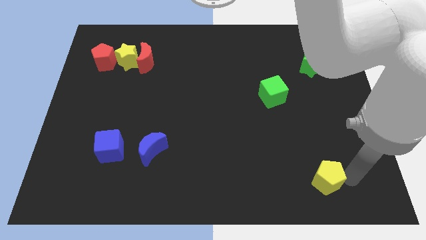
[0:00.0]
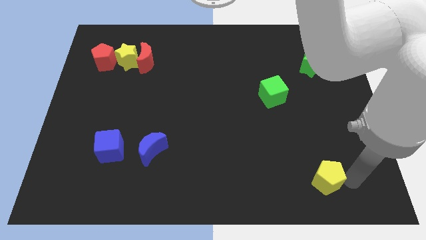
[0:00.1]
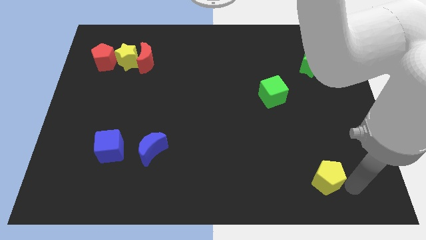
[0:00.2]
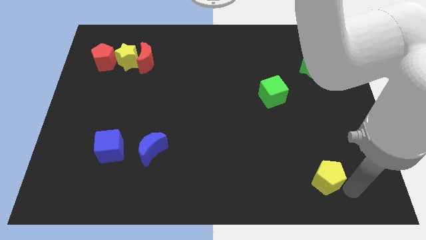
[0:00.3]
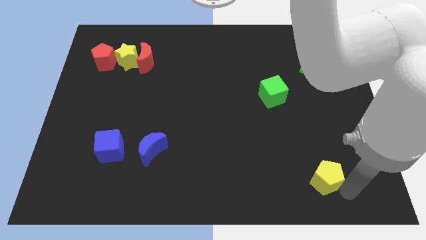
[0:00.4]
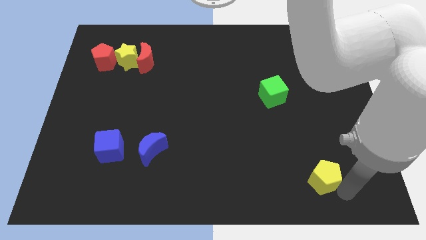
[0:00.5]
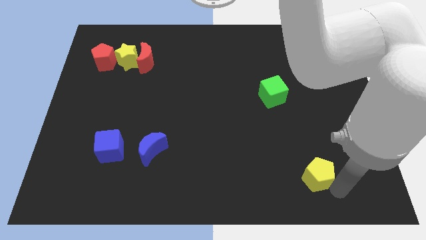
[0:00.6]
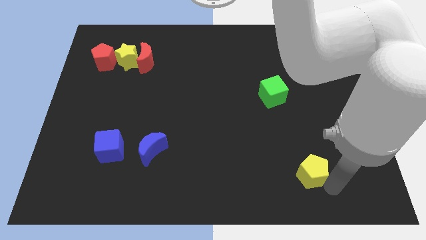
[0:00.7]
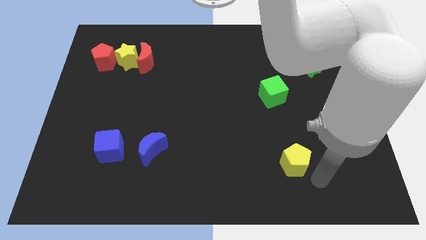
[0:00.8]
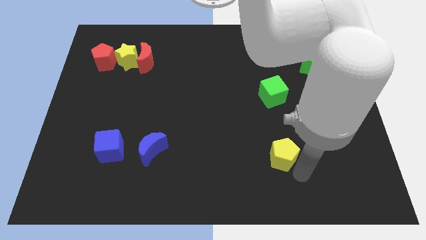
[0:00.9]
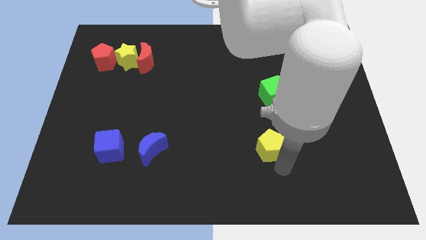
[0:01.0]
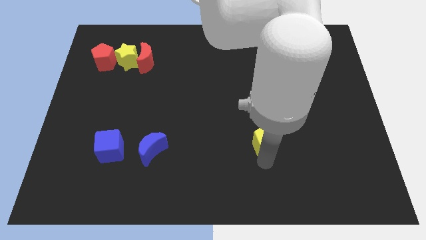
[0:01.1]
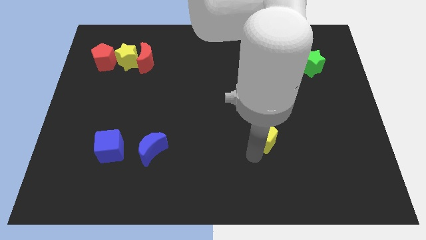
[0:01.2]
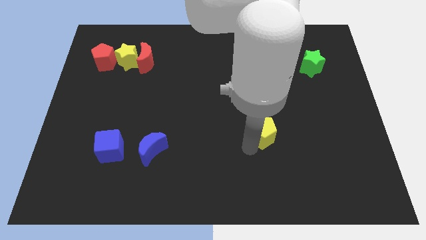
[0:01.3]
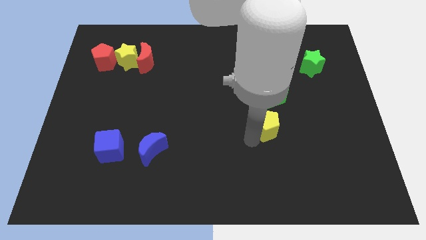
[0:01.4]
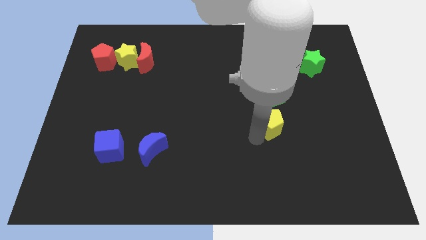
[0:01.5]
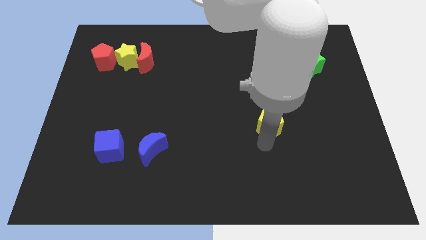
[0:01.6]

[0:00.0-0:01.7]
place the yellow pentagon under the green cube

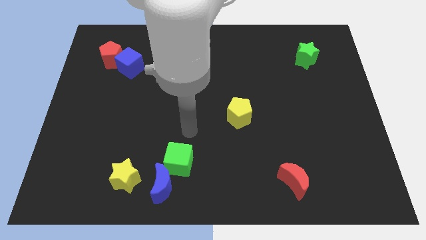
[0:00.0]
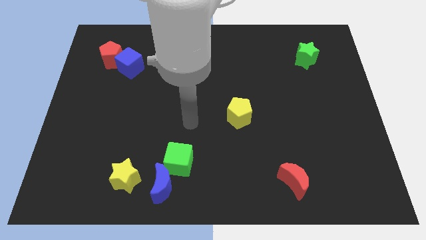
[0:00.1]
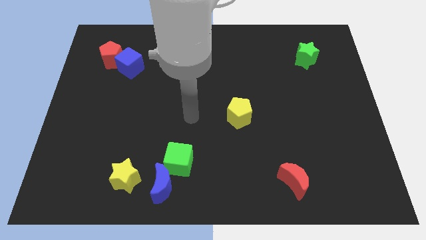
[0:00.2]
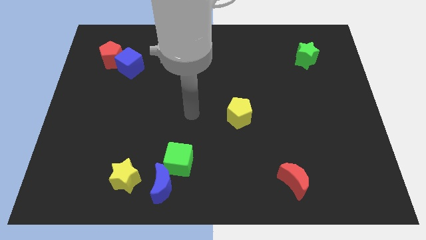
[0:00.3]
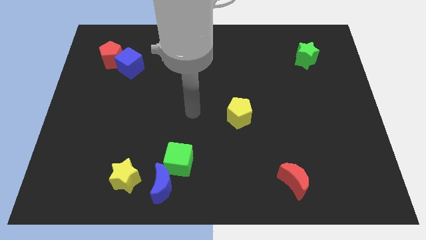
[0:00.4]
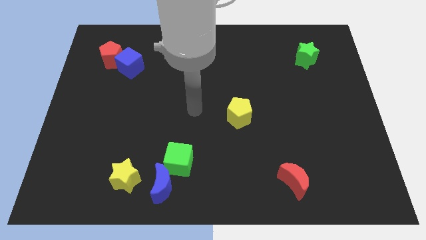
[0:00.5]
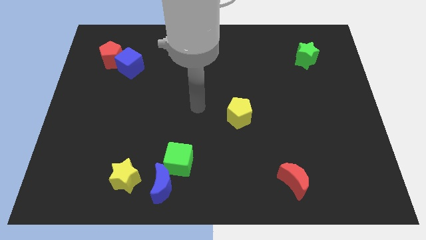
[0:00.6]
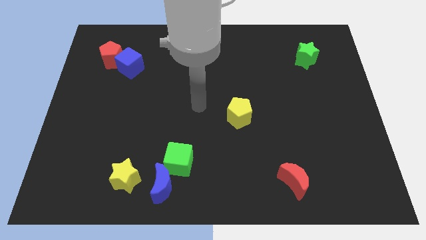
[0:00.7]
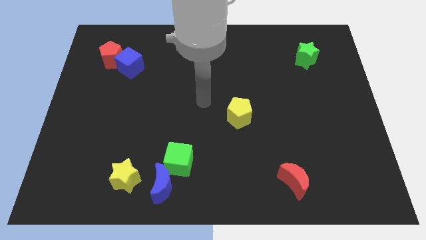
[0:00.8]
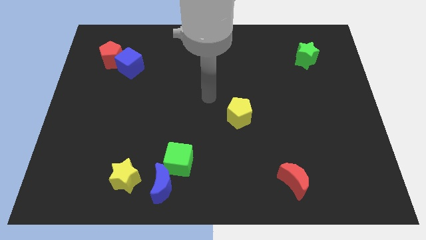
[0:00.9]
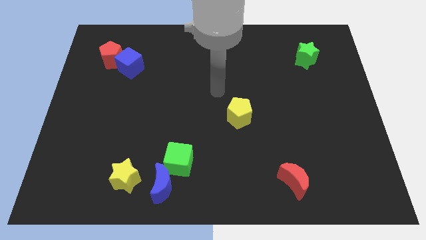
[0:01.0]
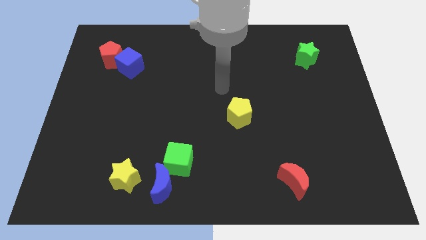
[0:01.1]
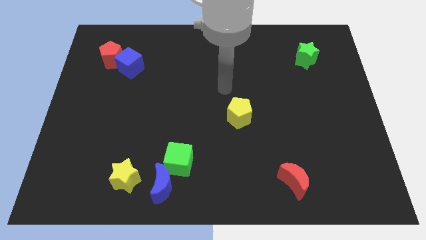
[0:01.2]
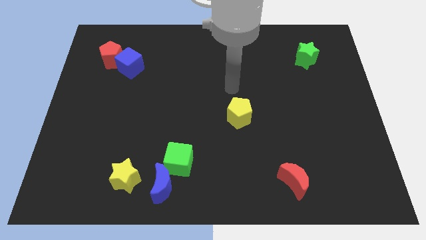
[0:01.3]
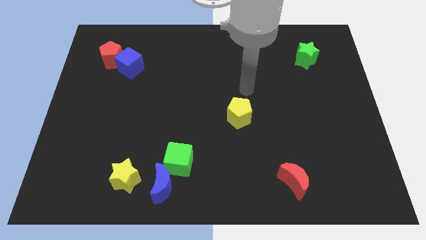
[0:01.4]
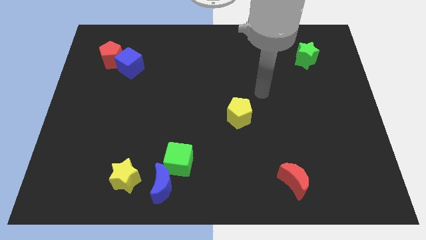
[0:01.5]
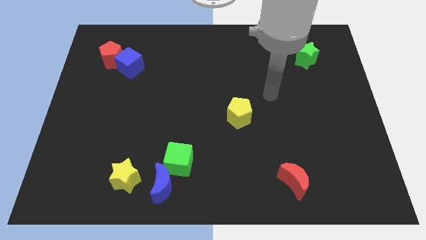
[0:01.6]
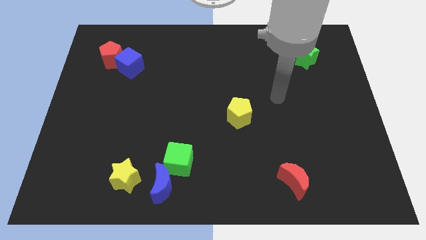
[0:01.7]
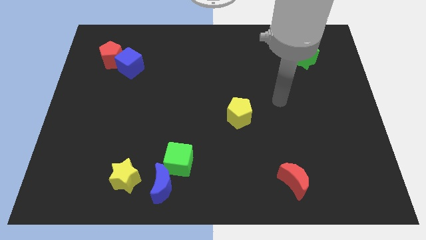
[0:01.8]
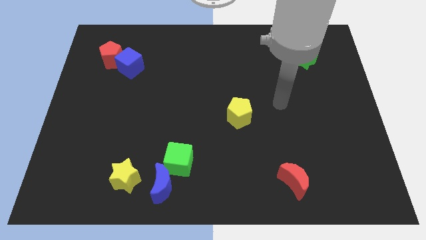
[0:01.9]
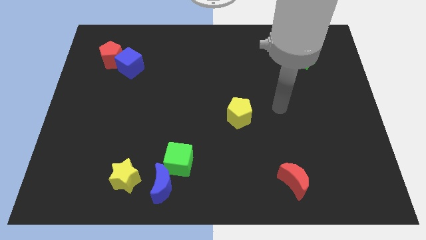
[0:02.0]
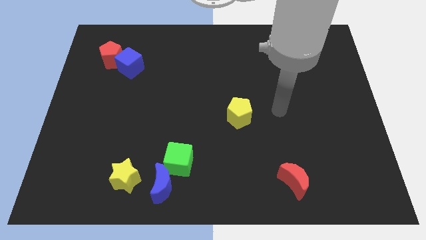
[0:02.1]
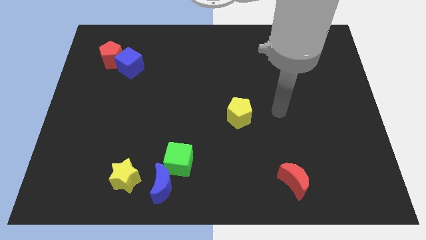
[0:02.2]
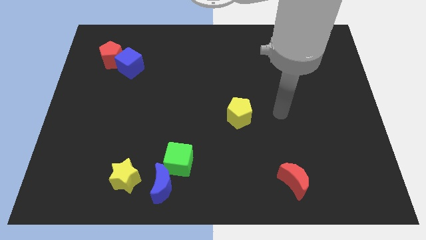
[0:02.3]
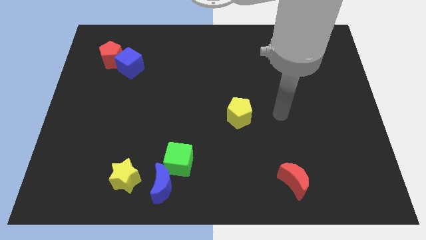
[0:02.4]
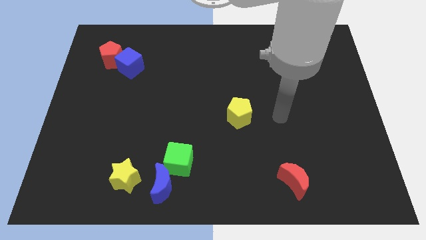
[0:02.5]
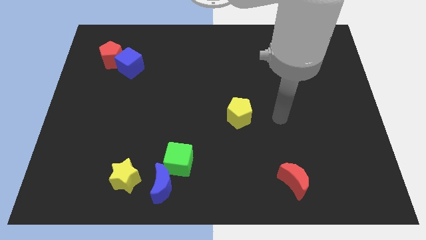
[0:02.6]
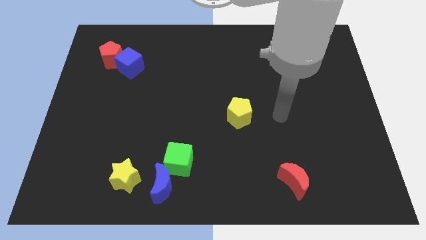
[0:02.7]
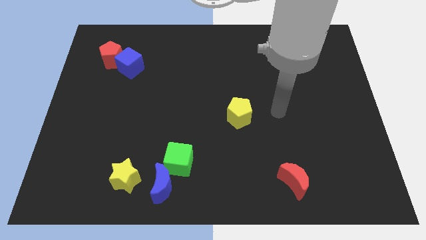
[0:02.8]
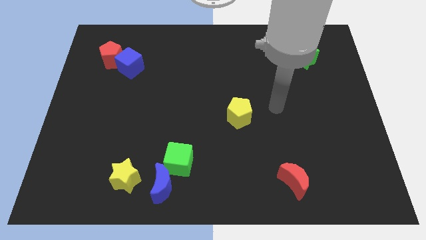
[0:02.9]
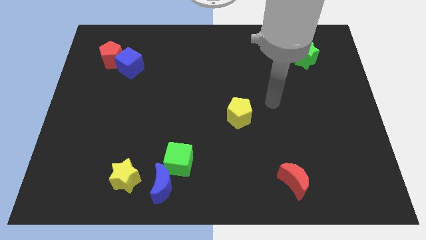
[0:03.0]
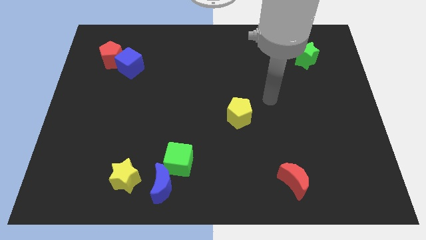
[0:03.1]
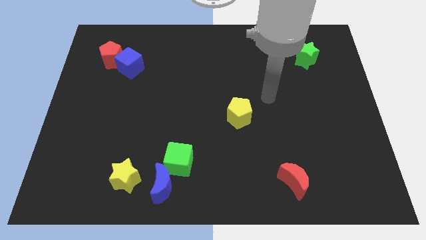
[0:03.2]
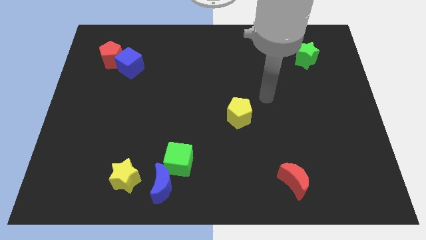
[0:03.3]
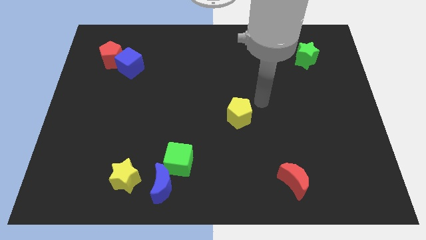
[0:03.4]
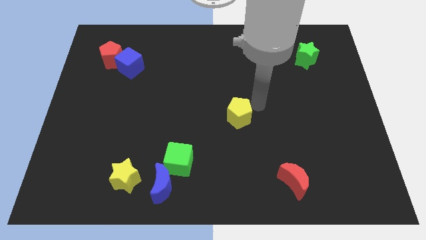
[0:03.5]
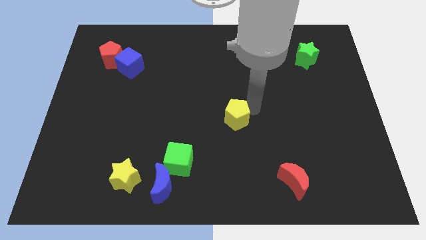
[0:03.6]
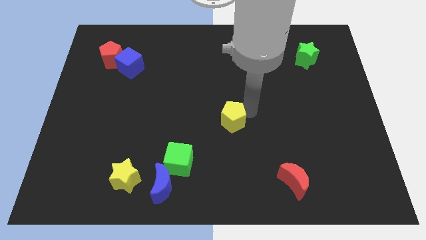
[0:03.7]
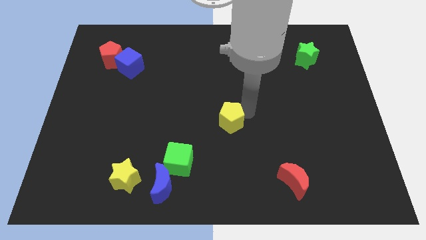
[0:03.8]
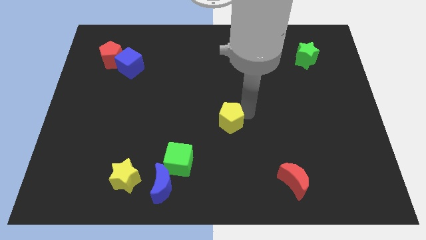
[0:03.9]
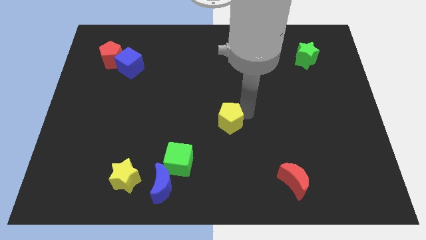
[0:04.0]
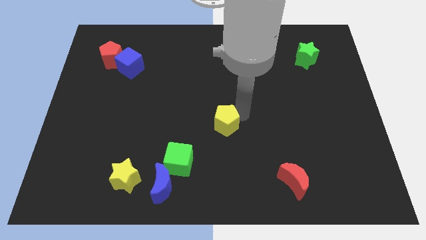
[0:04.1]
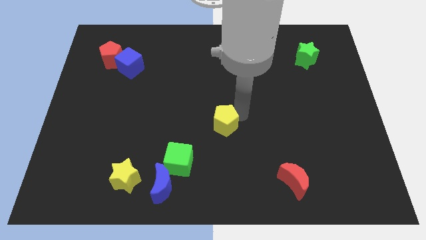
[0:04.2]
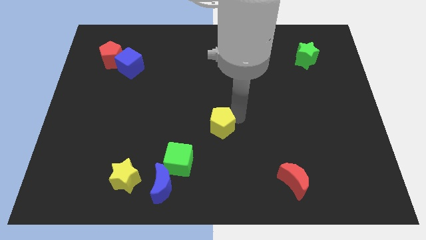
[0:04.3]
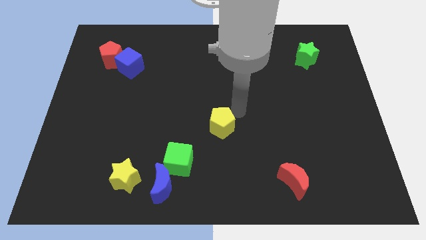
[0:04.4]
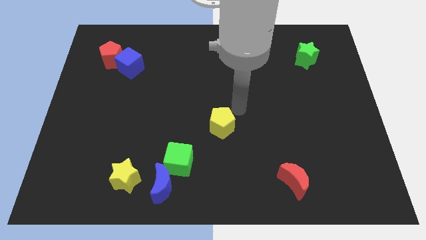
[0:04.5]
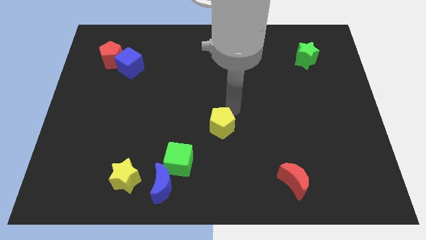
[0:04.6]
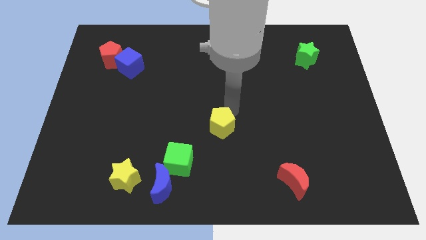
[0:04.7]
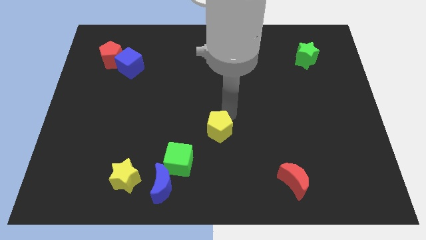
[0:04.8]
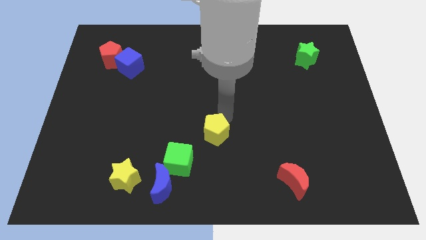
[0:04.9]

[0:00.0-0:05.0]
push the yellow pentagon towards the bottom side

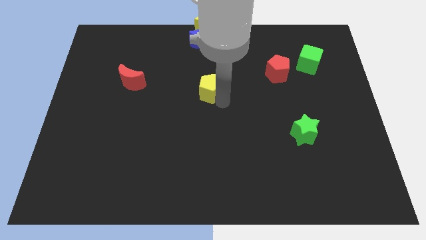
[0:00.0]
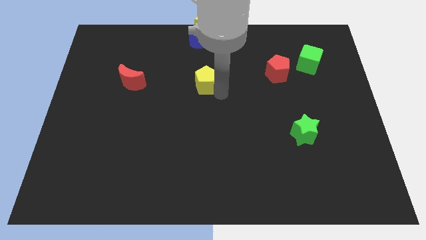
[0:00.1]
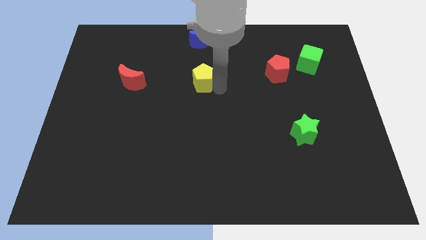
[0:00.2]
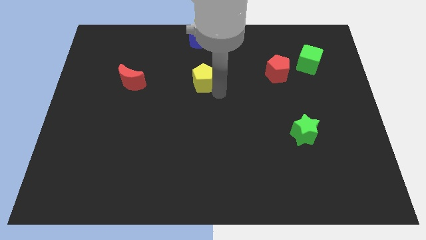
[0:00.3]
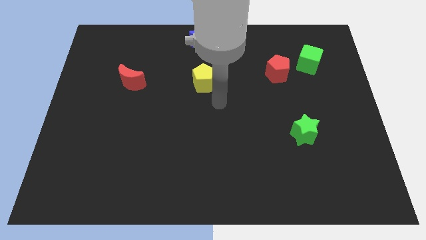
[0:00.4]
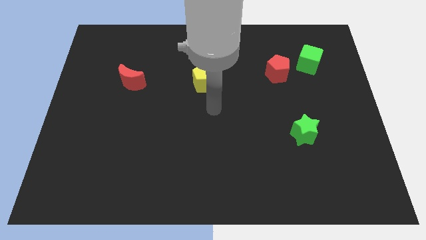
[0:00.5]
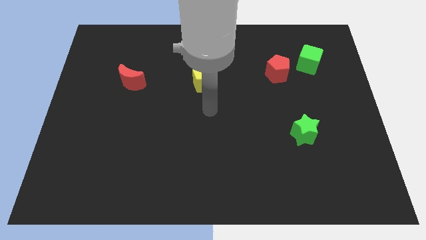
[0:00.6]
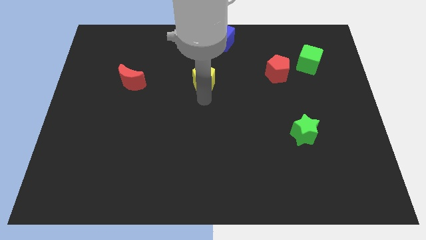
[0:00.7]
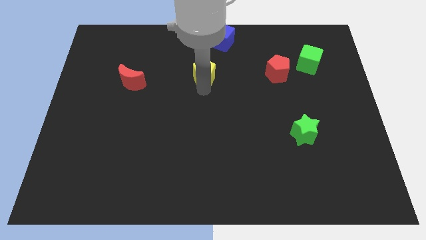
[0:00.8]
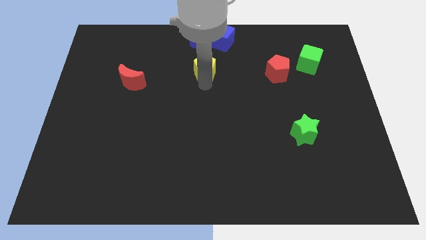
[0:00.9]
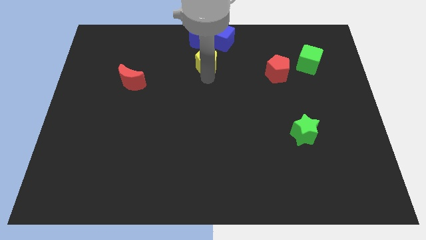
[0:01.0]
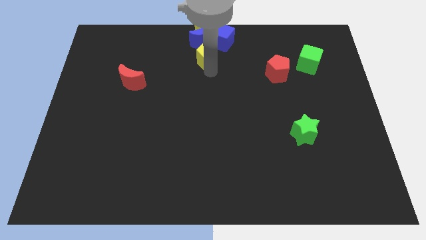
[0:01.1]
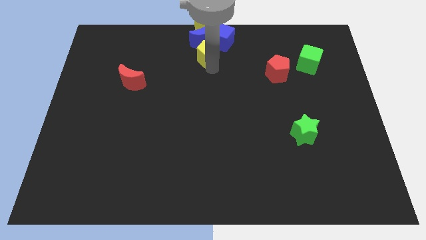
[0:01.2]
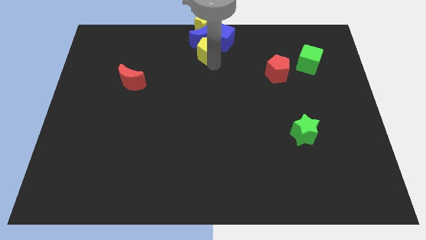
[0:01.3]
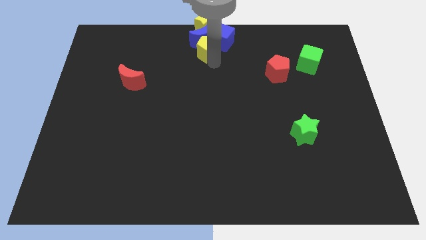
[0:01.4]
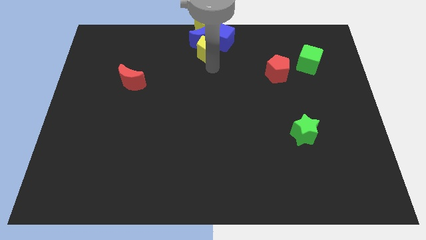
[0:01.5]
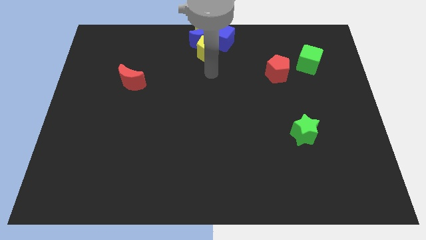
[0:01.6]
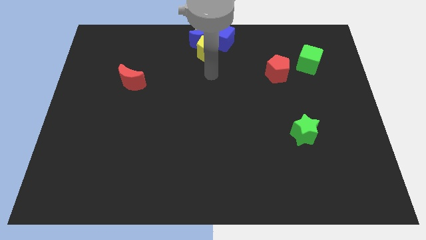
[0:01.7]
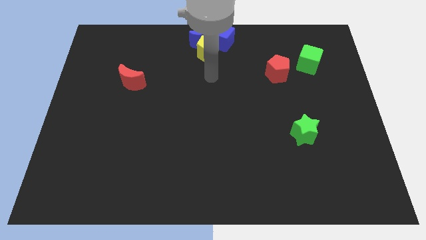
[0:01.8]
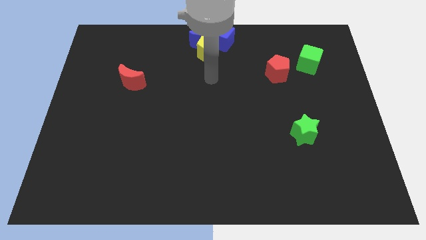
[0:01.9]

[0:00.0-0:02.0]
slide the yellow pentagon into the blue moon

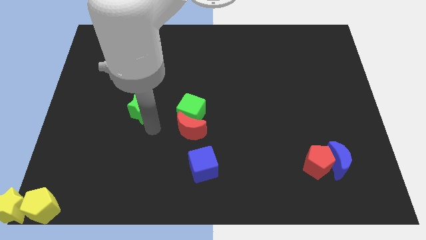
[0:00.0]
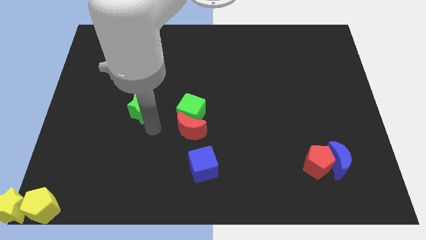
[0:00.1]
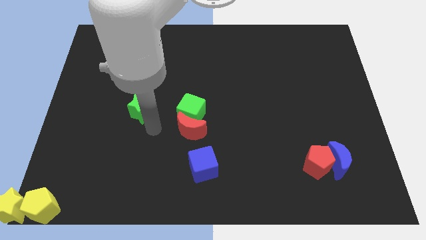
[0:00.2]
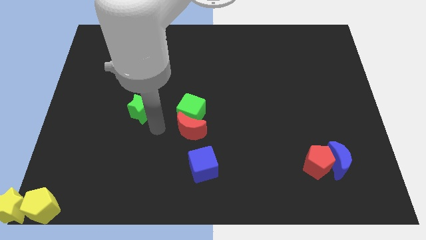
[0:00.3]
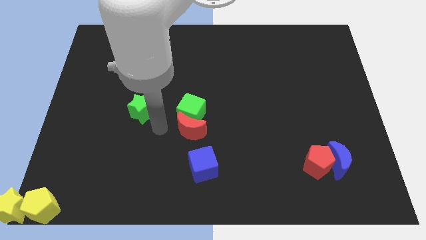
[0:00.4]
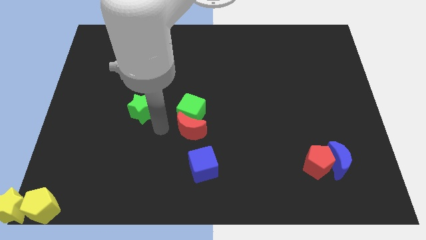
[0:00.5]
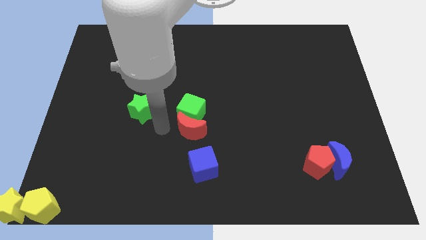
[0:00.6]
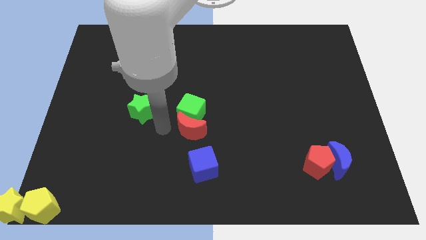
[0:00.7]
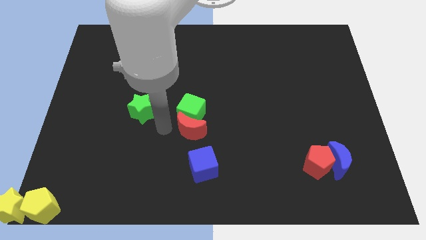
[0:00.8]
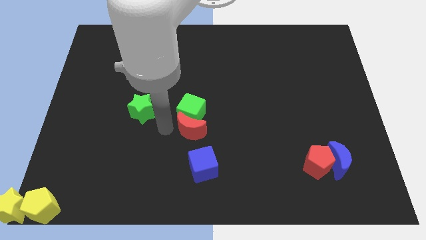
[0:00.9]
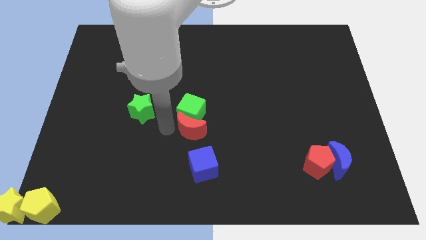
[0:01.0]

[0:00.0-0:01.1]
push red half moon to right corner of the green cube
